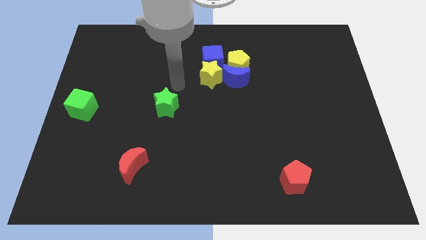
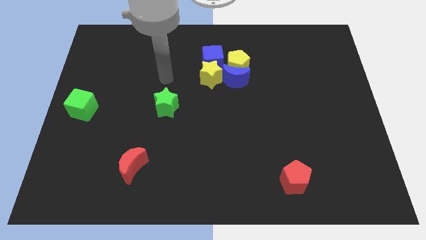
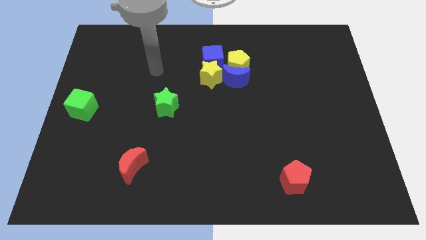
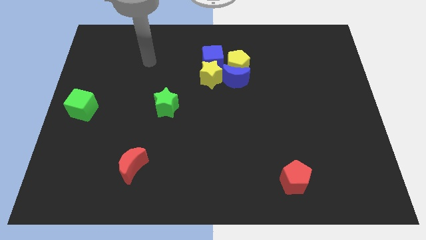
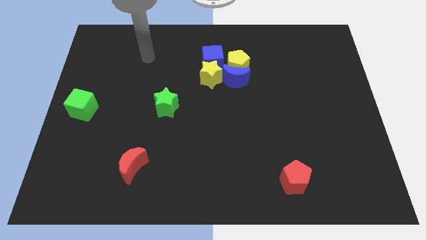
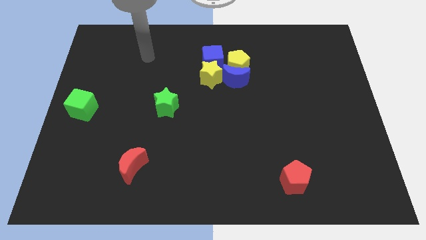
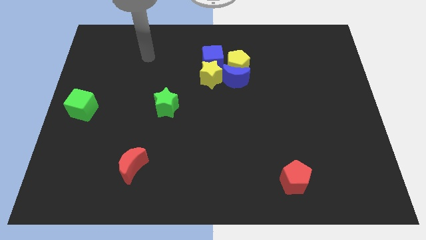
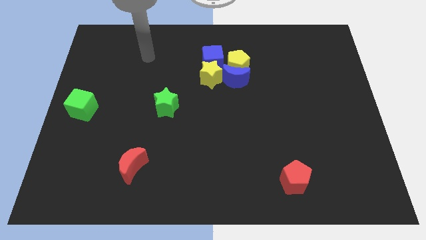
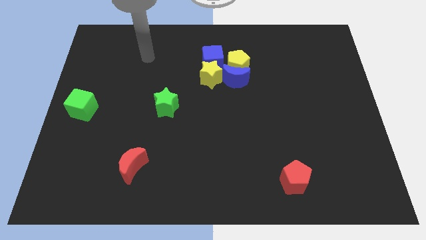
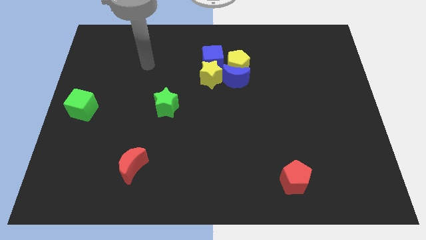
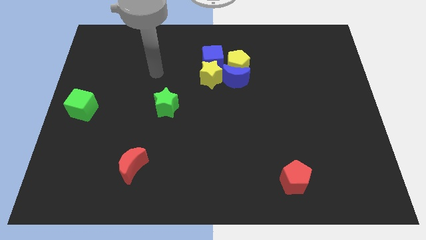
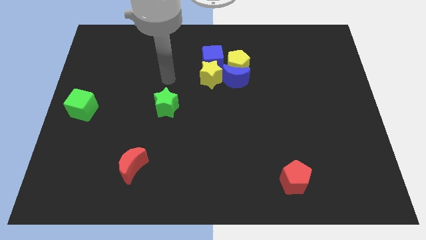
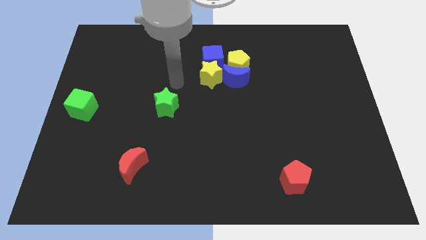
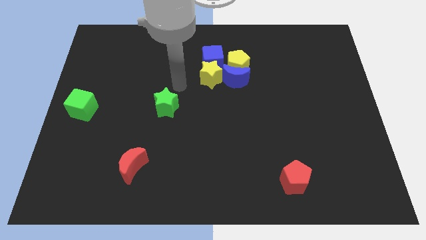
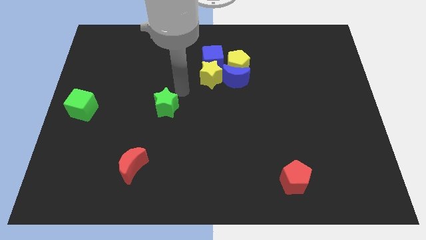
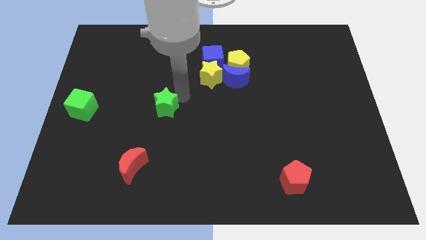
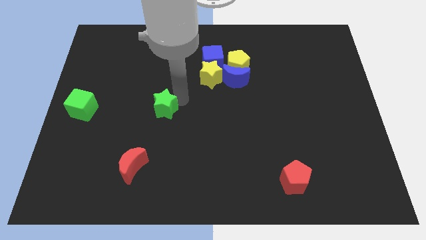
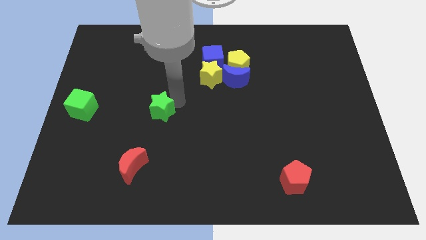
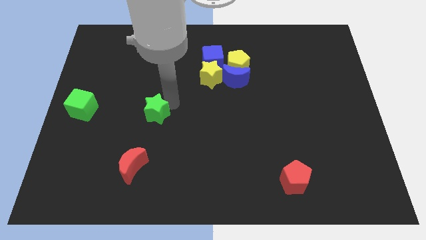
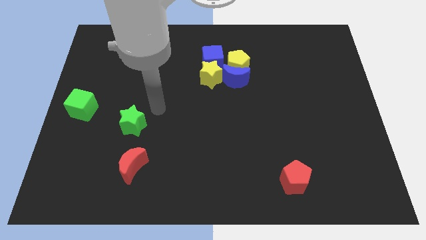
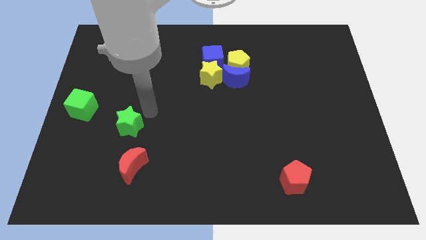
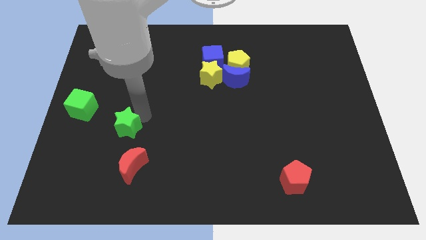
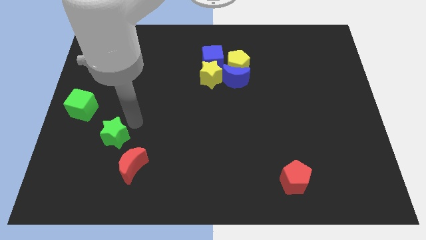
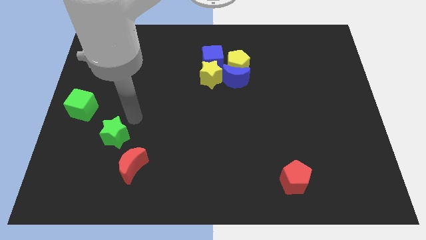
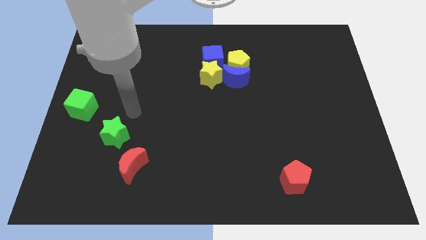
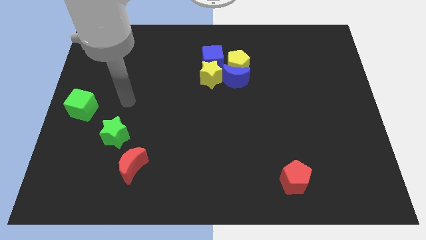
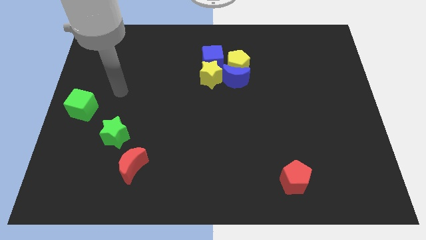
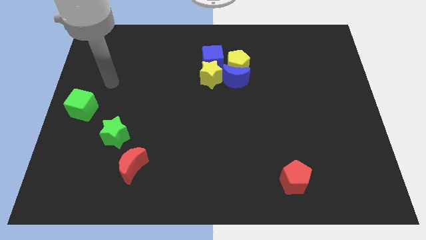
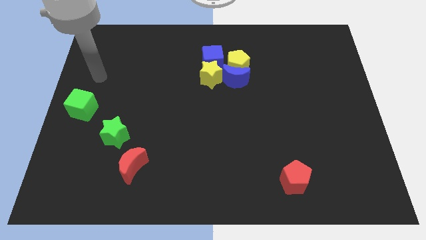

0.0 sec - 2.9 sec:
push the green star diagonally in between the green cube and the red crescent

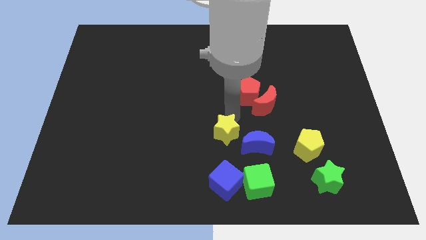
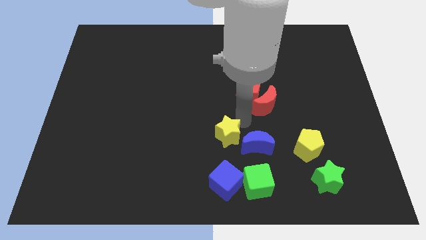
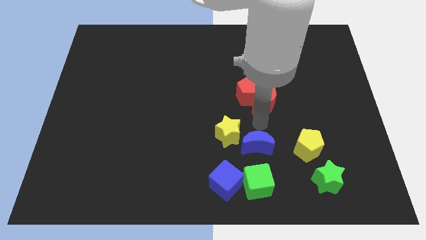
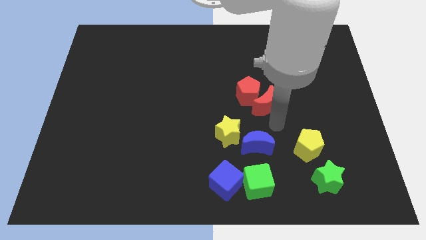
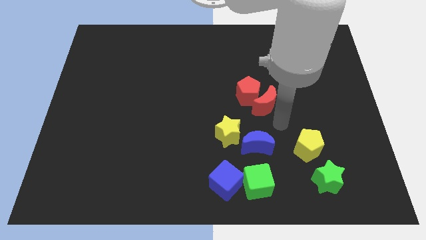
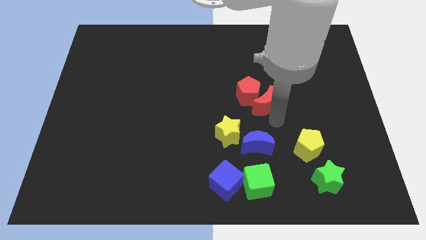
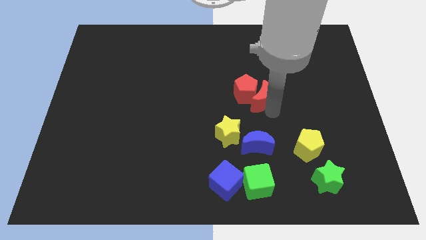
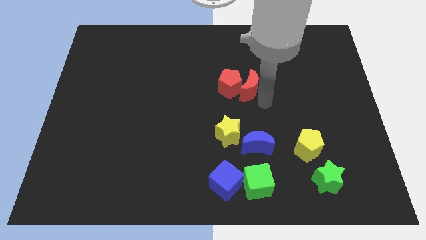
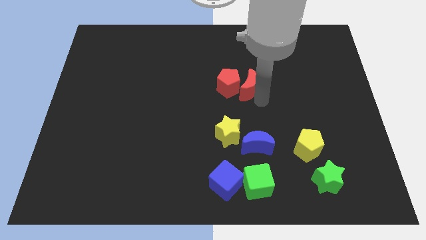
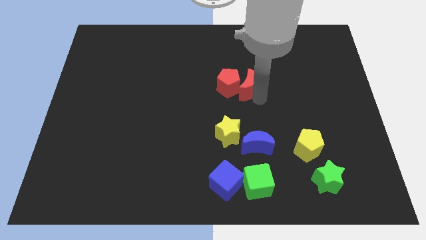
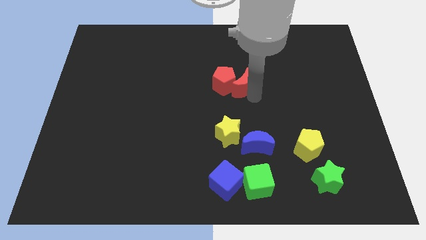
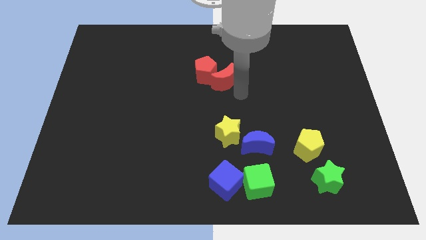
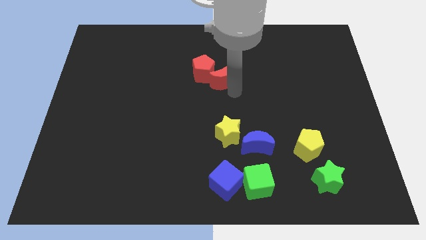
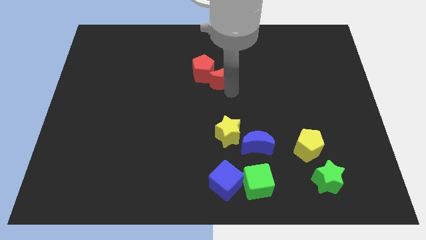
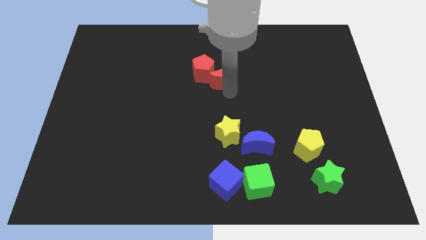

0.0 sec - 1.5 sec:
move the red crescent along with red pentagon

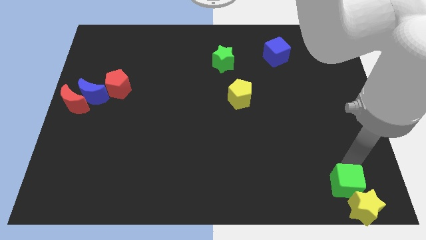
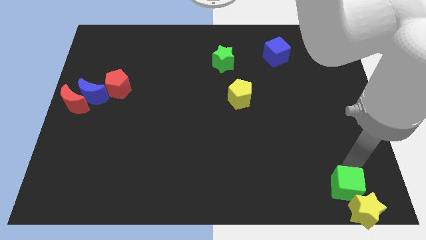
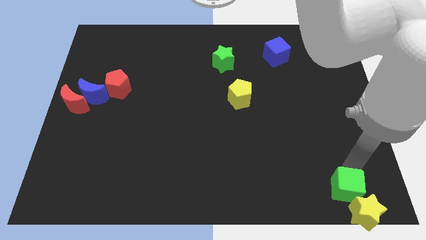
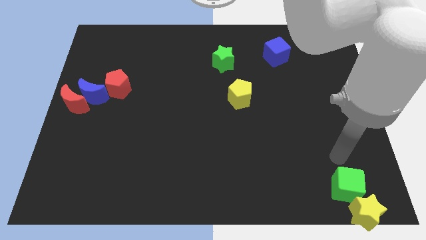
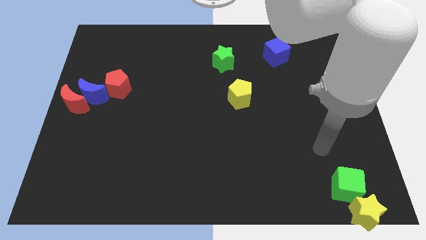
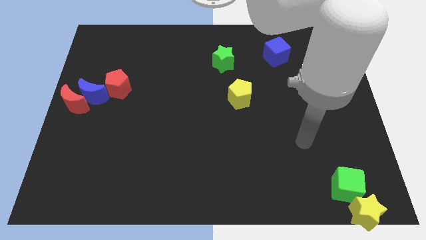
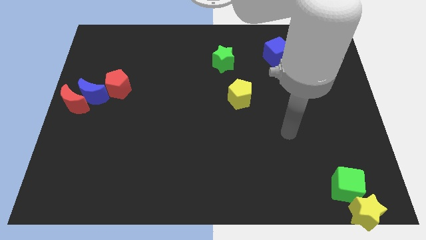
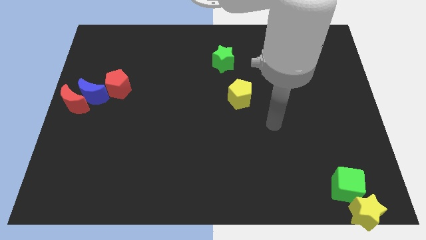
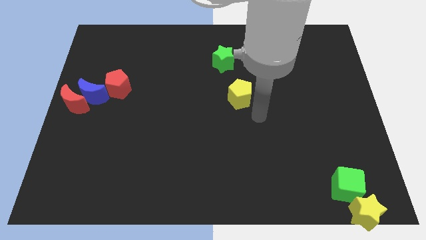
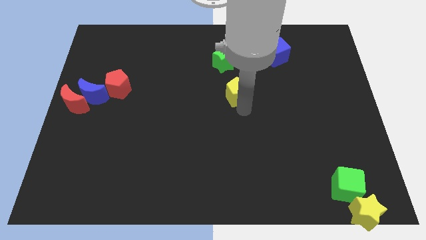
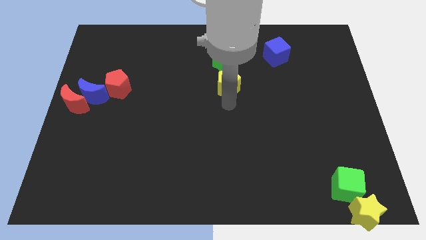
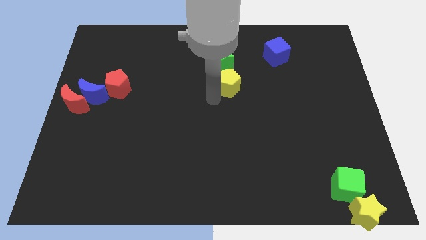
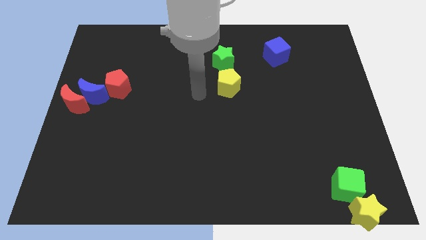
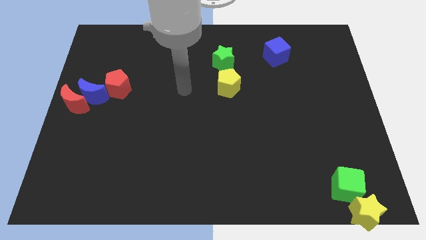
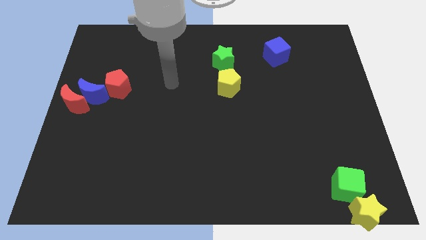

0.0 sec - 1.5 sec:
push the arm away from the green cube

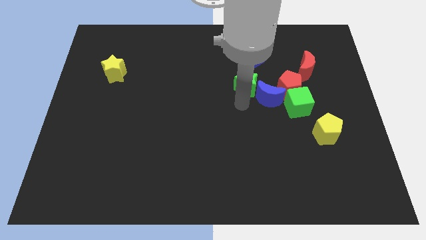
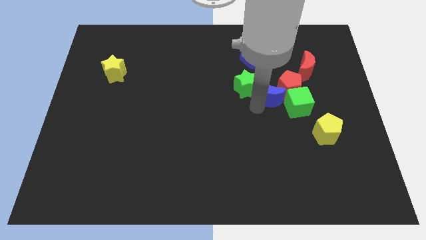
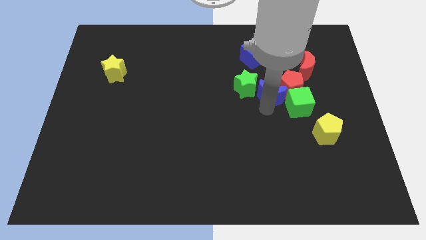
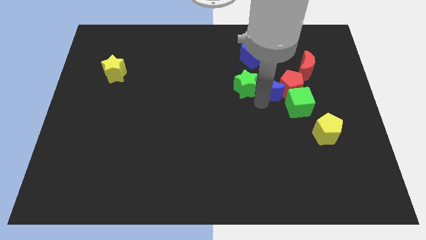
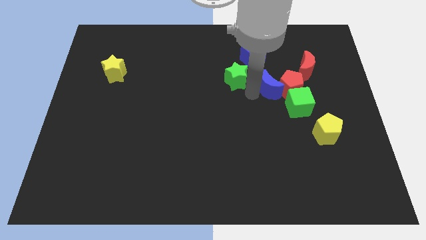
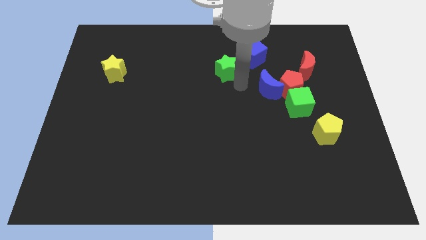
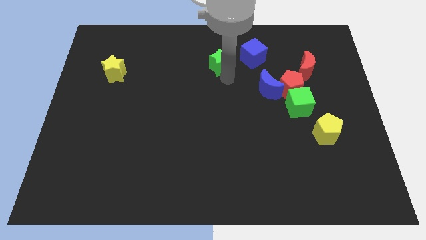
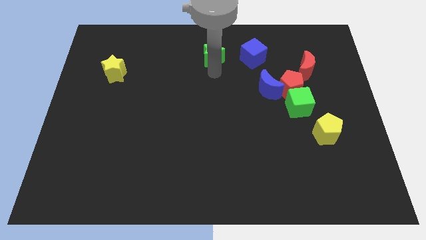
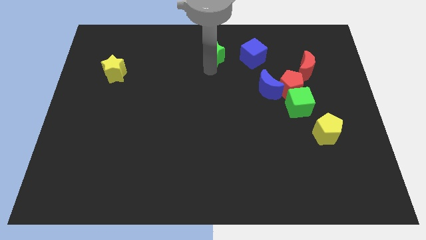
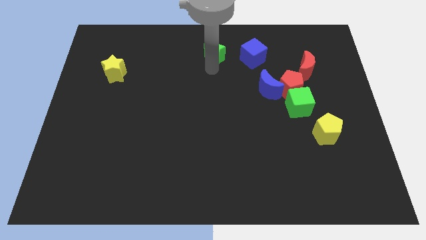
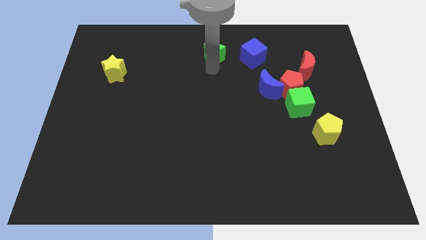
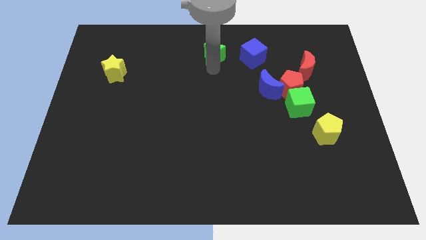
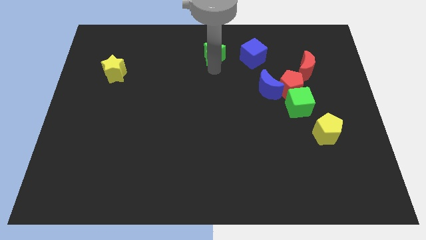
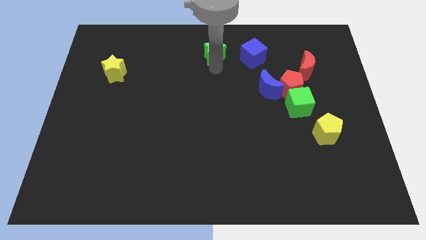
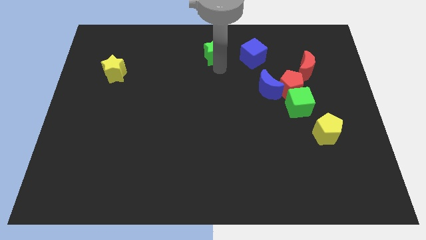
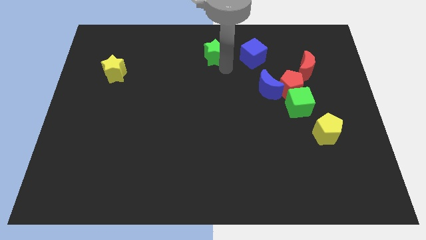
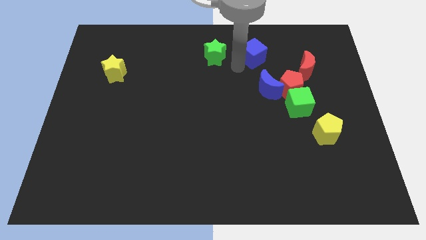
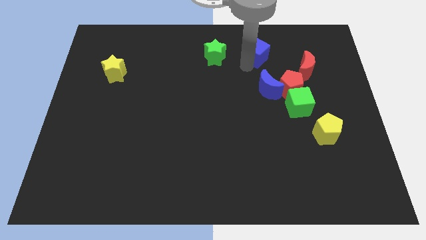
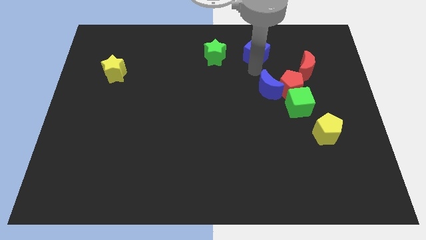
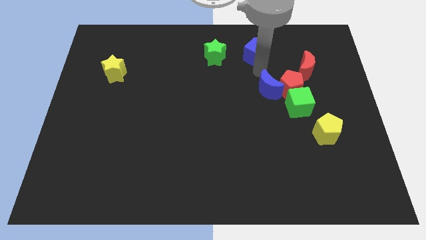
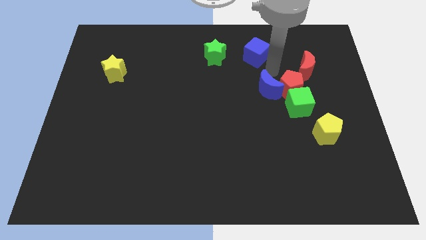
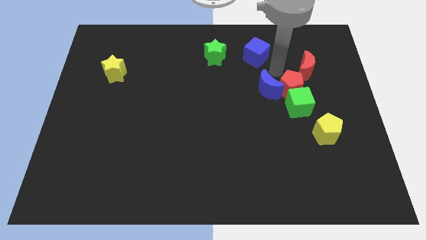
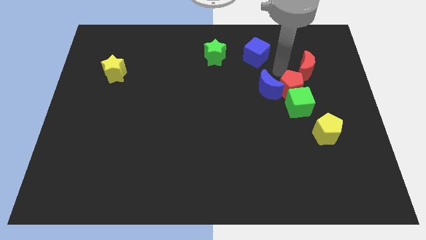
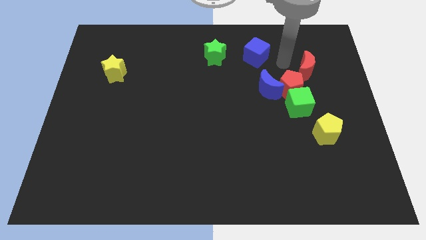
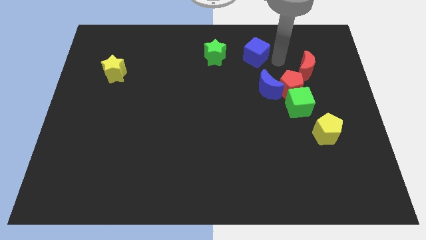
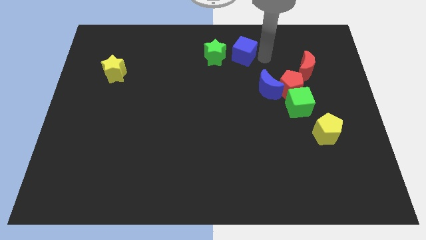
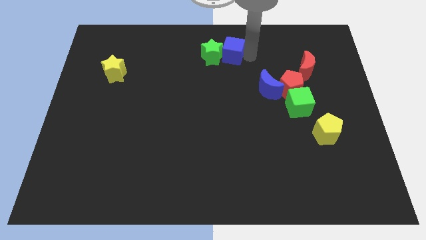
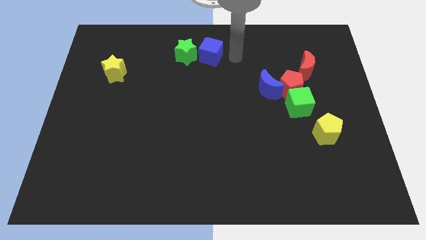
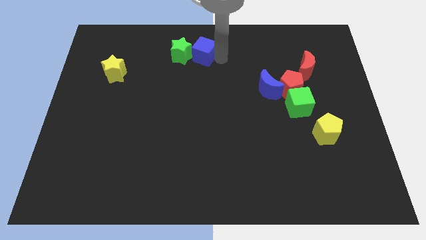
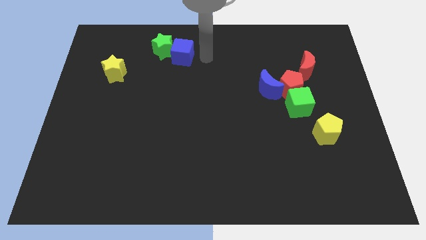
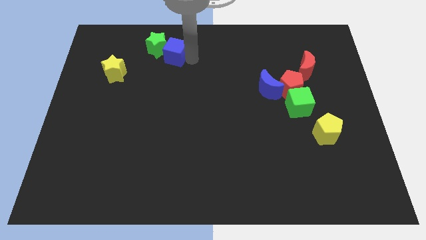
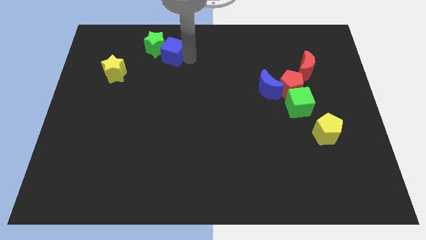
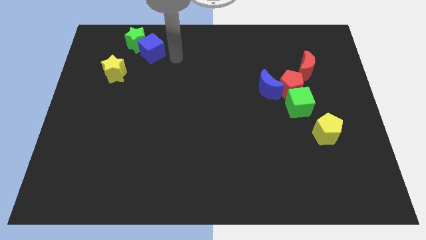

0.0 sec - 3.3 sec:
push the green star and blue cube towards the top left side of the board
